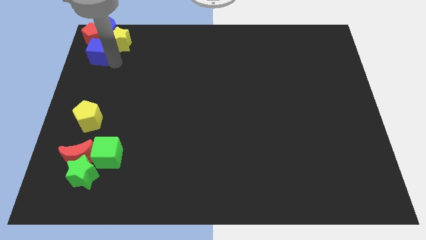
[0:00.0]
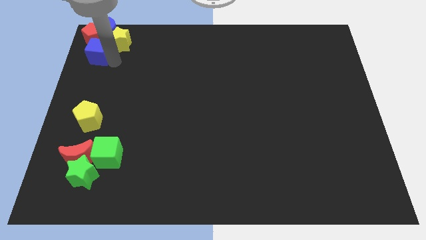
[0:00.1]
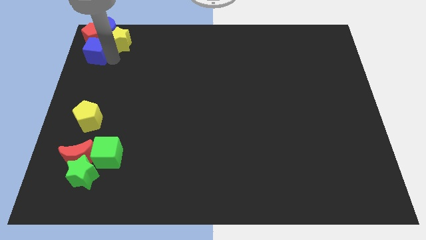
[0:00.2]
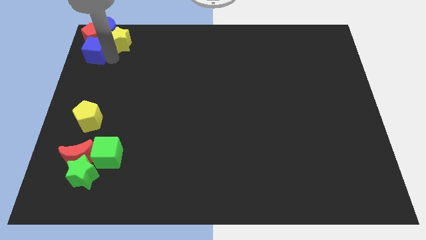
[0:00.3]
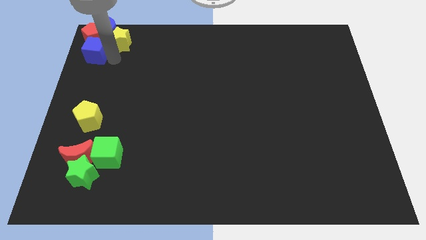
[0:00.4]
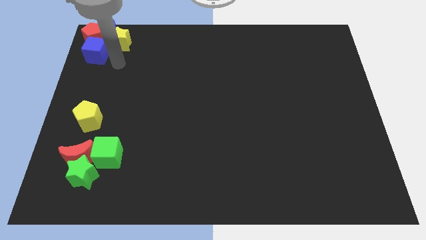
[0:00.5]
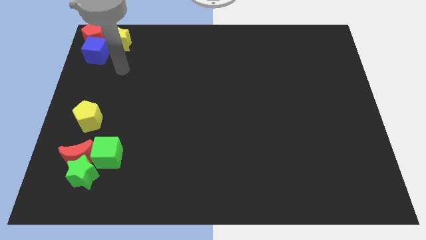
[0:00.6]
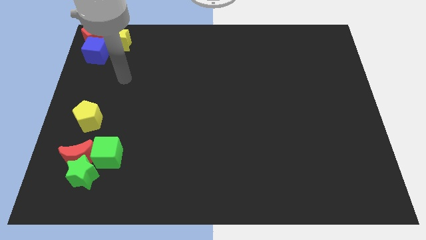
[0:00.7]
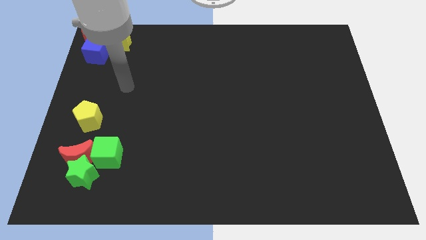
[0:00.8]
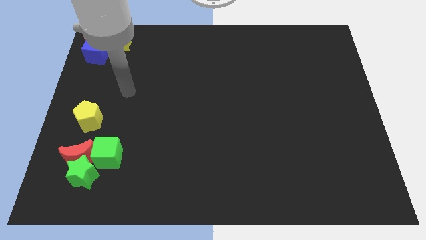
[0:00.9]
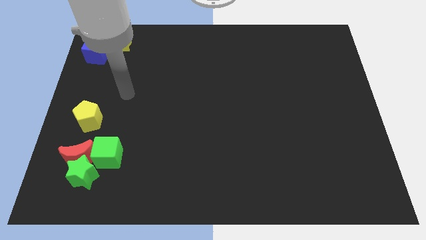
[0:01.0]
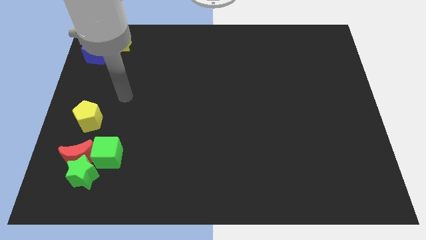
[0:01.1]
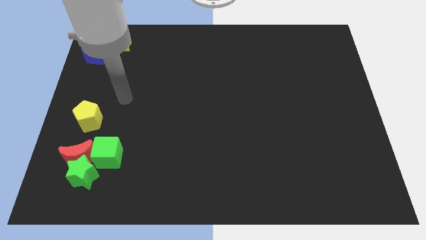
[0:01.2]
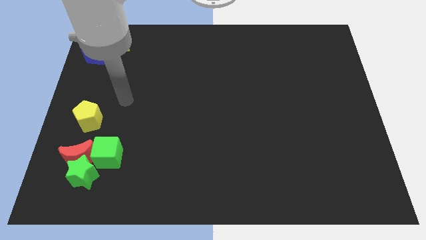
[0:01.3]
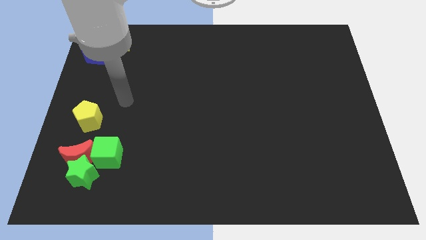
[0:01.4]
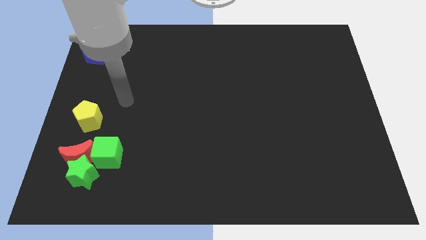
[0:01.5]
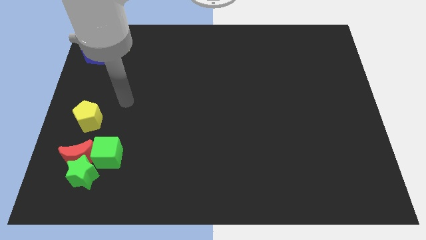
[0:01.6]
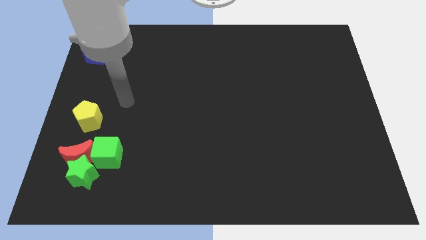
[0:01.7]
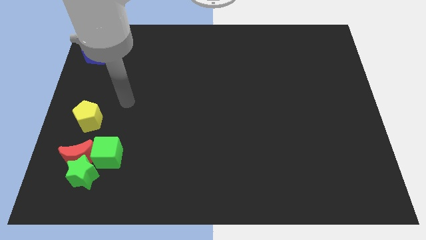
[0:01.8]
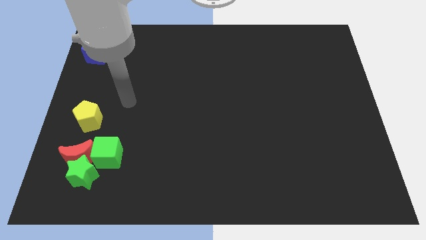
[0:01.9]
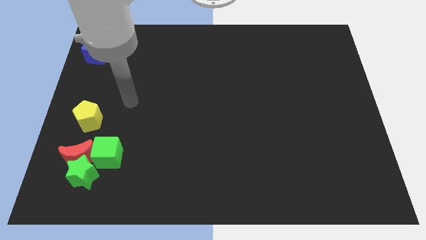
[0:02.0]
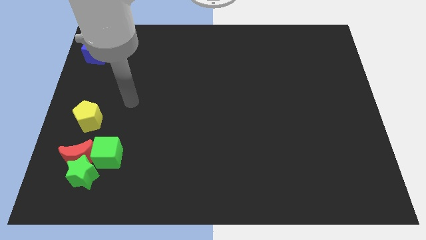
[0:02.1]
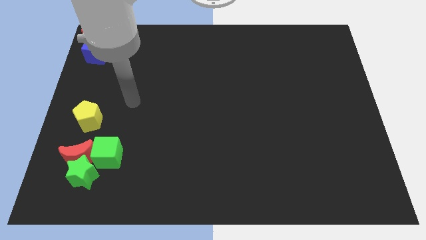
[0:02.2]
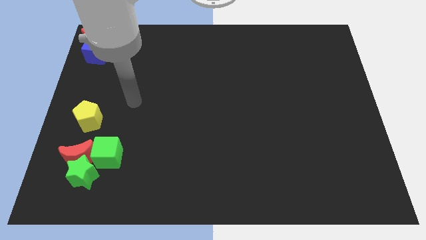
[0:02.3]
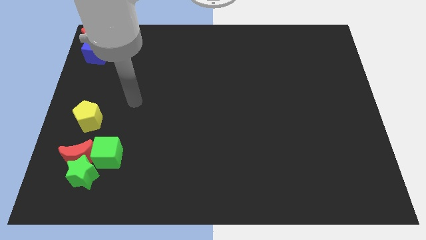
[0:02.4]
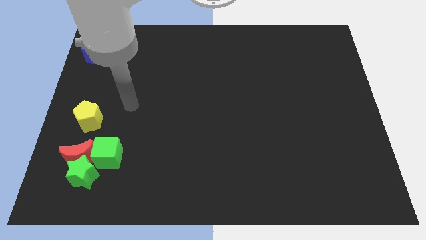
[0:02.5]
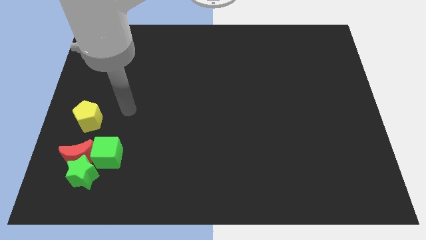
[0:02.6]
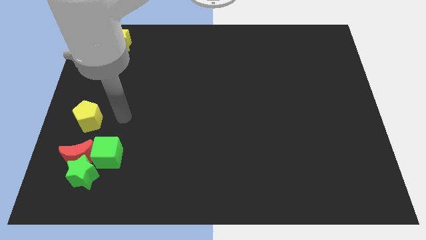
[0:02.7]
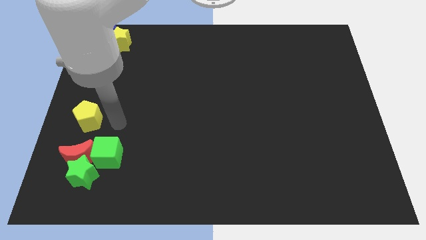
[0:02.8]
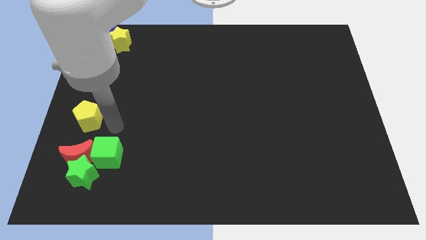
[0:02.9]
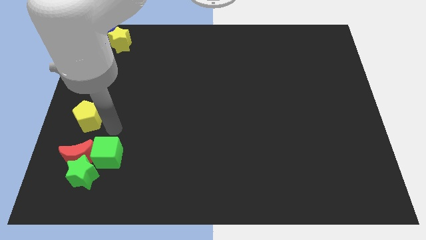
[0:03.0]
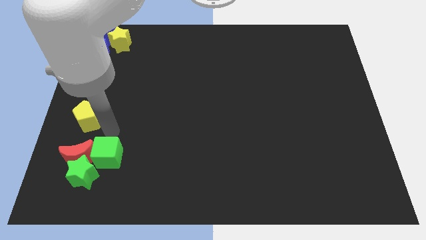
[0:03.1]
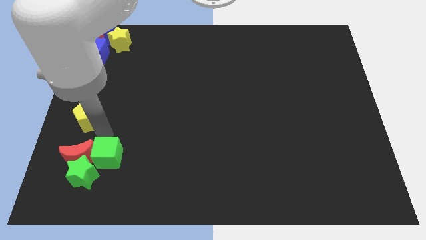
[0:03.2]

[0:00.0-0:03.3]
move the hand on the top of the green cube

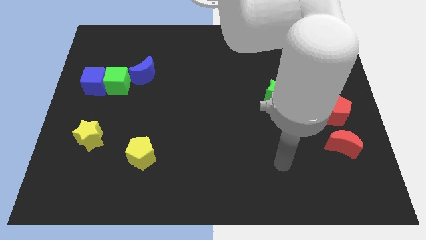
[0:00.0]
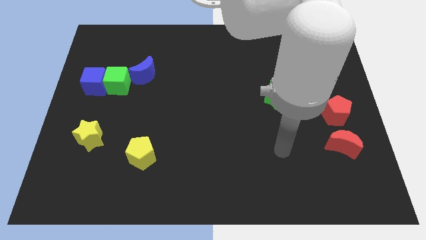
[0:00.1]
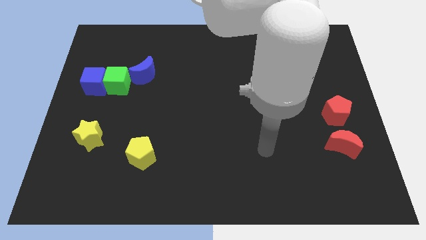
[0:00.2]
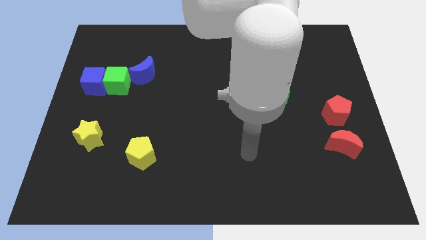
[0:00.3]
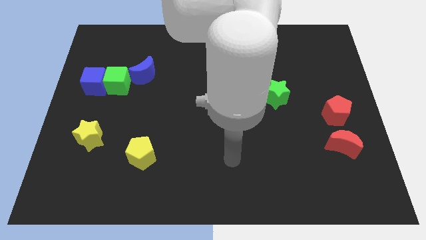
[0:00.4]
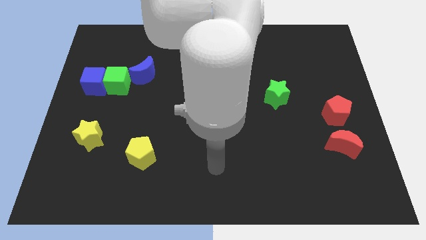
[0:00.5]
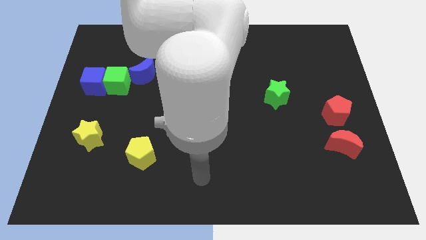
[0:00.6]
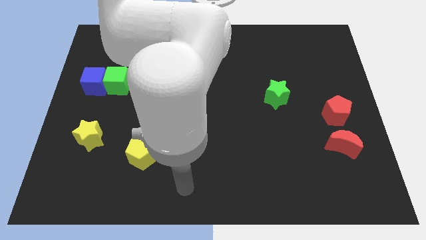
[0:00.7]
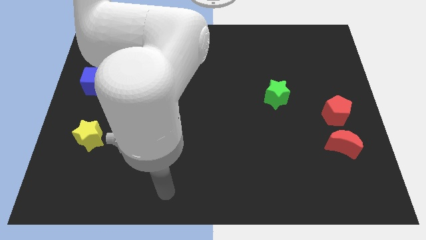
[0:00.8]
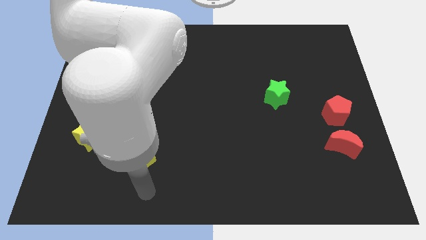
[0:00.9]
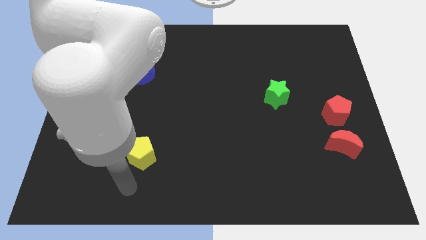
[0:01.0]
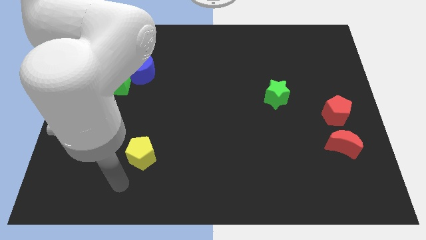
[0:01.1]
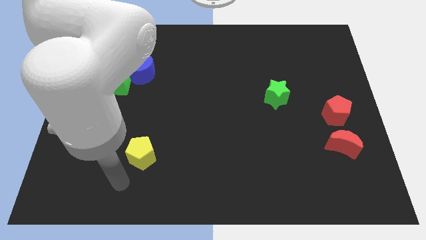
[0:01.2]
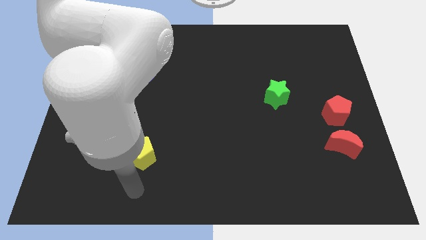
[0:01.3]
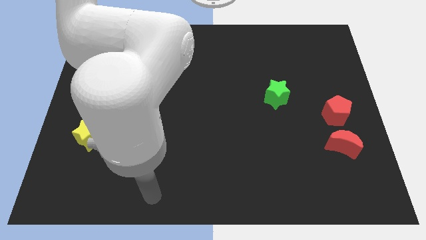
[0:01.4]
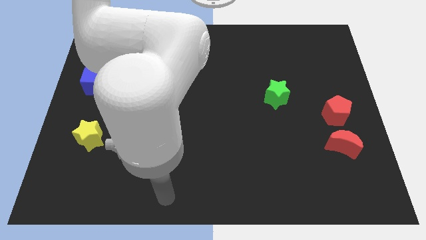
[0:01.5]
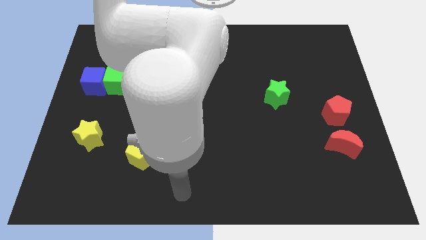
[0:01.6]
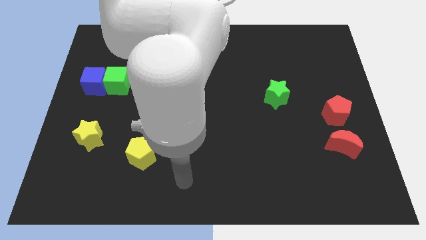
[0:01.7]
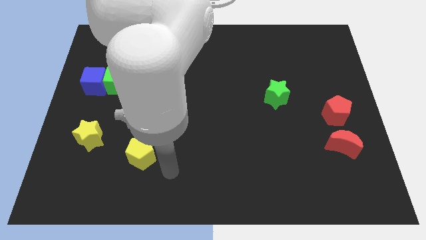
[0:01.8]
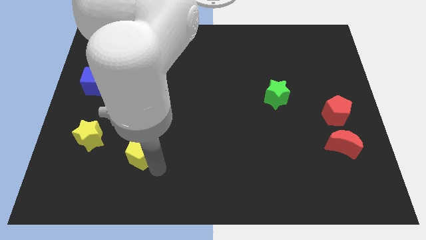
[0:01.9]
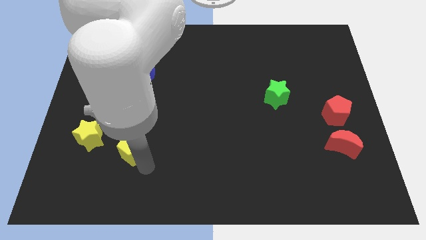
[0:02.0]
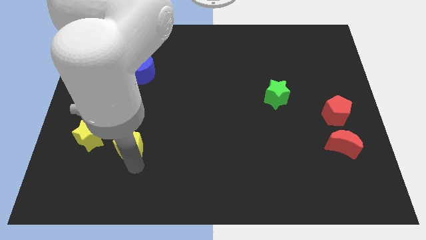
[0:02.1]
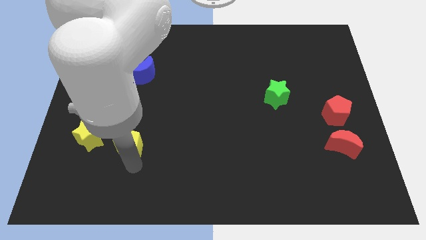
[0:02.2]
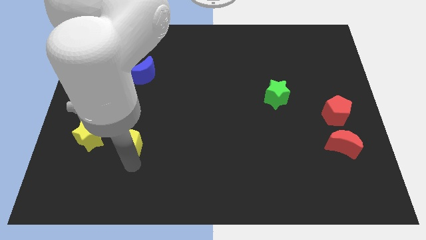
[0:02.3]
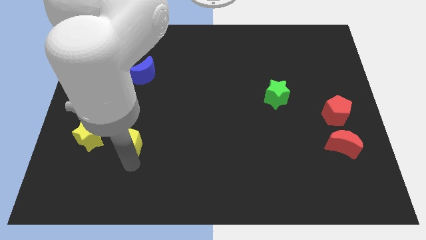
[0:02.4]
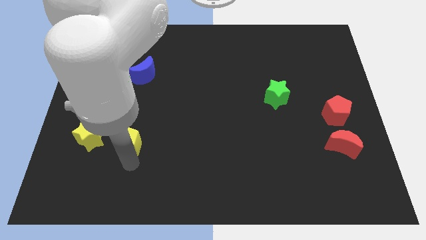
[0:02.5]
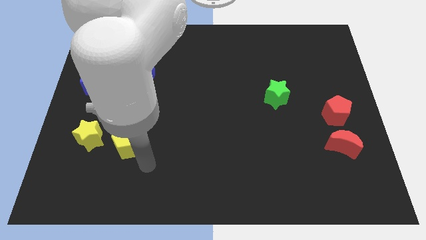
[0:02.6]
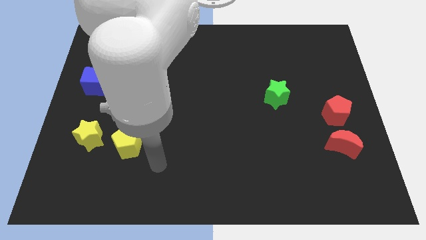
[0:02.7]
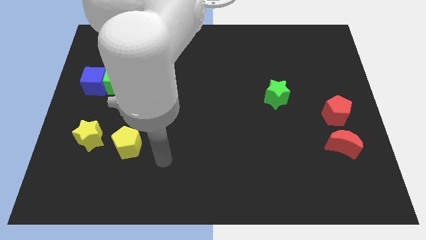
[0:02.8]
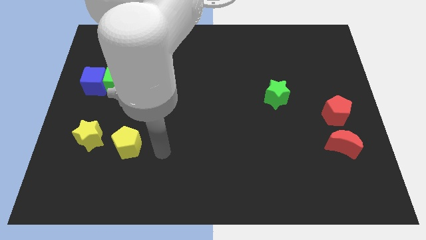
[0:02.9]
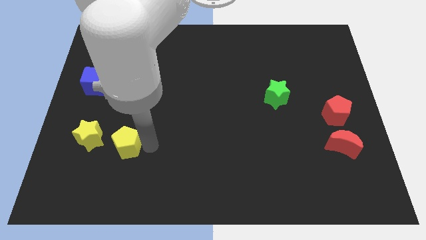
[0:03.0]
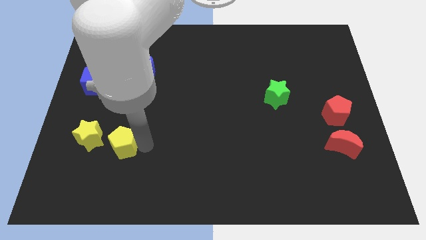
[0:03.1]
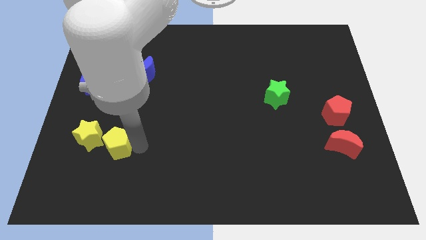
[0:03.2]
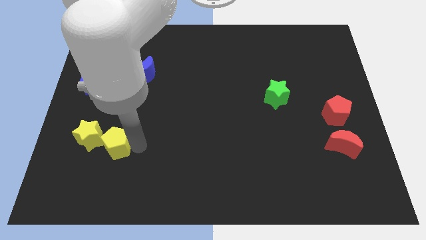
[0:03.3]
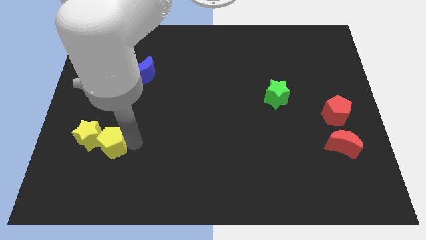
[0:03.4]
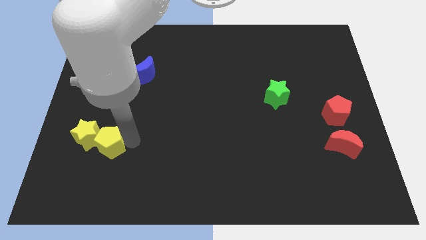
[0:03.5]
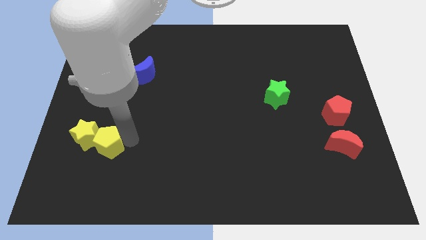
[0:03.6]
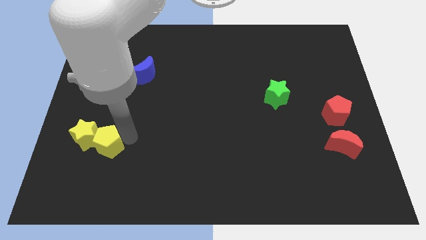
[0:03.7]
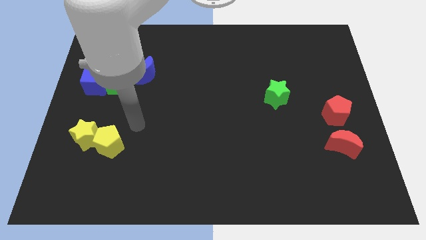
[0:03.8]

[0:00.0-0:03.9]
move the yellow pentagon right to the yellow star

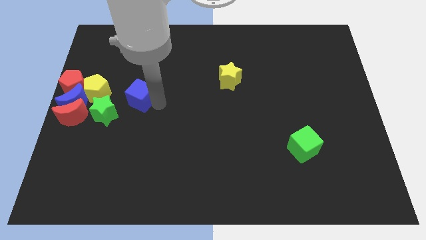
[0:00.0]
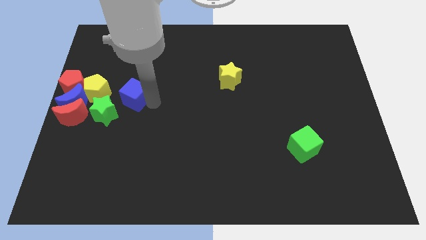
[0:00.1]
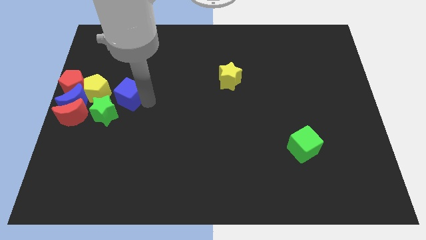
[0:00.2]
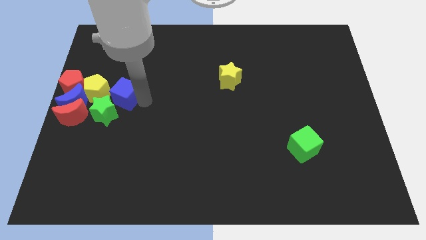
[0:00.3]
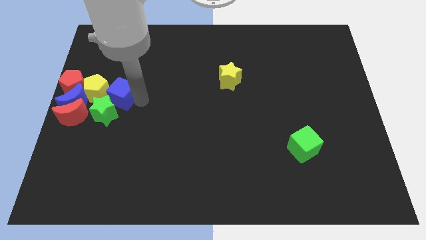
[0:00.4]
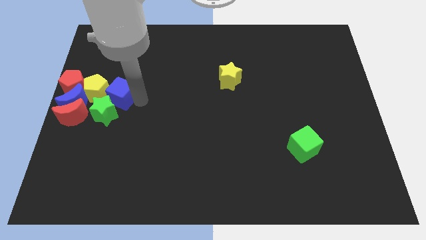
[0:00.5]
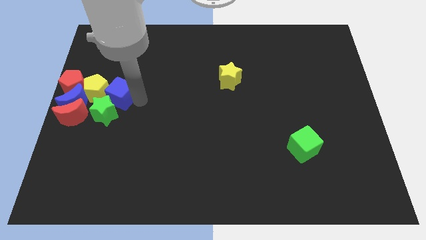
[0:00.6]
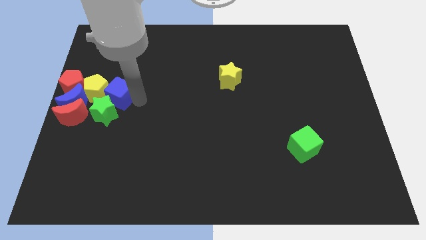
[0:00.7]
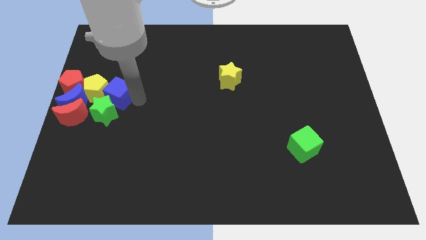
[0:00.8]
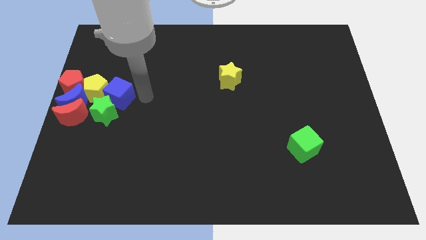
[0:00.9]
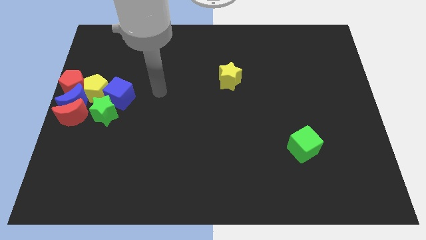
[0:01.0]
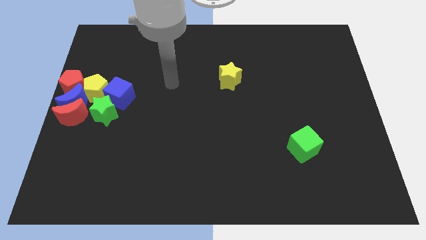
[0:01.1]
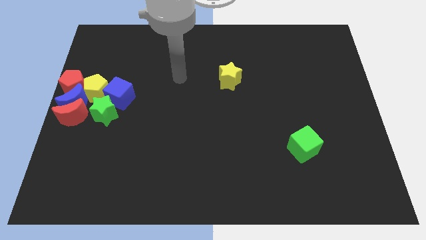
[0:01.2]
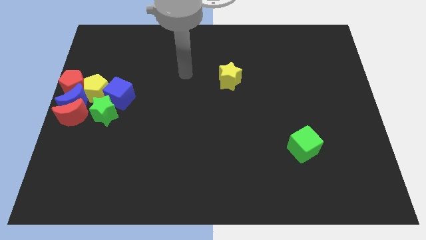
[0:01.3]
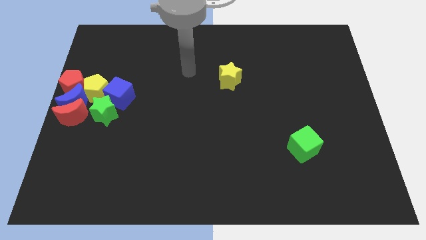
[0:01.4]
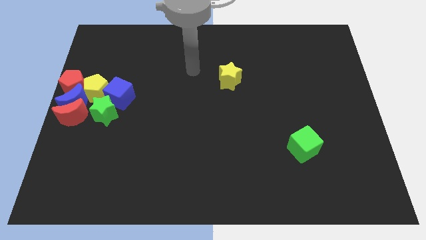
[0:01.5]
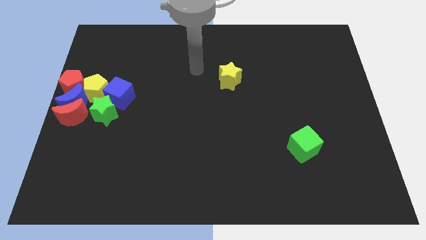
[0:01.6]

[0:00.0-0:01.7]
move the blue cube to the right side of the yellow pentagon

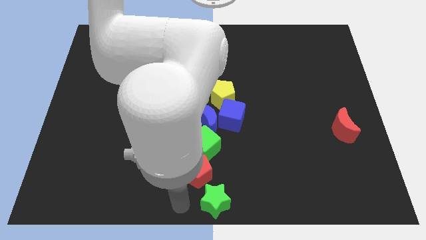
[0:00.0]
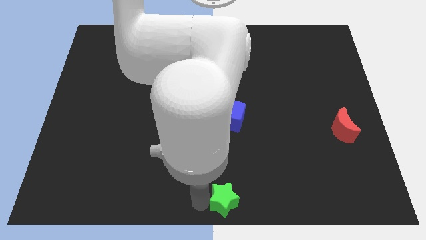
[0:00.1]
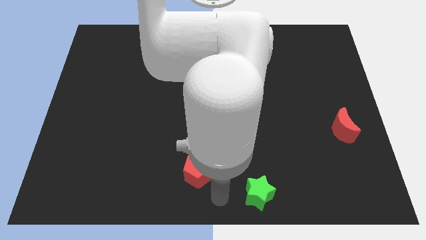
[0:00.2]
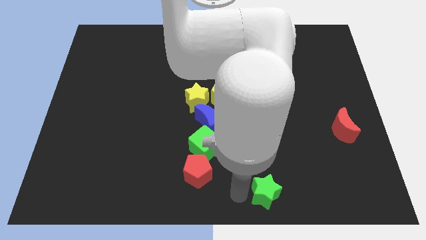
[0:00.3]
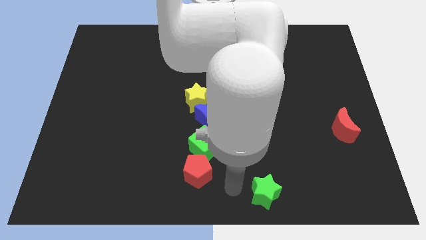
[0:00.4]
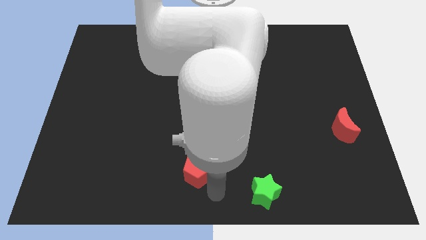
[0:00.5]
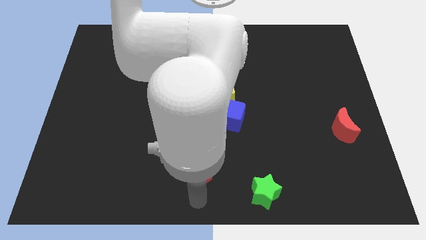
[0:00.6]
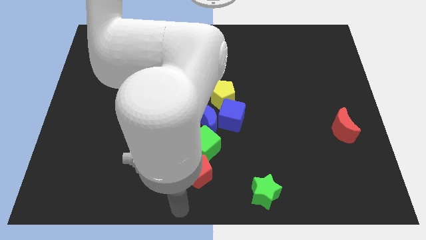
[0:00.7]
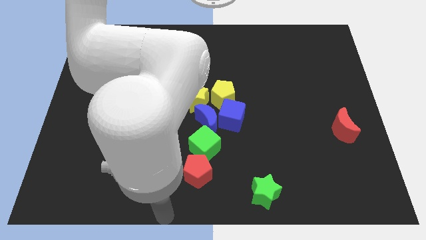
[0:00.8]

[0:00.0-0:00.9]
push the green star towards the right side of the board
